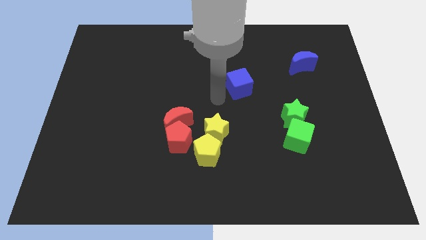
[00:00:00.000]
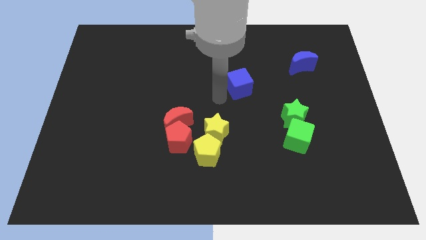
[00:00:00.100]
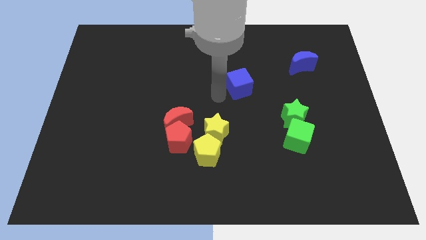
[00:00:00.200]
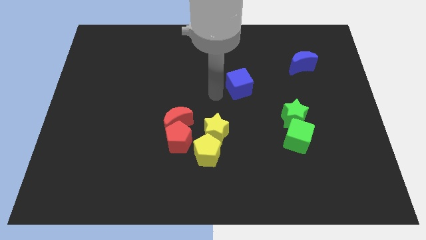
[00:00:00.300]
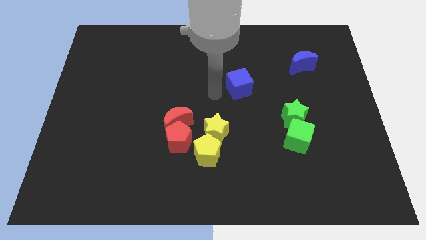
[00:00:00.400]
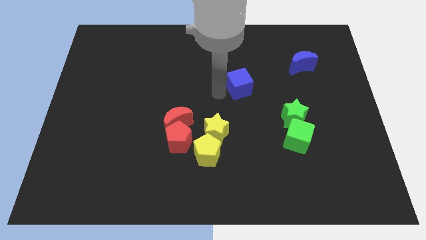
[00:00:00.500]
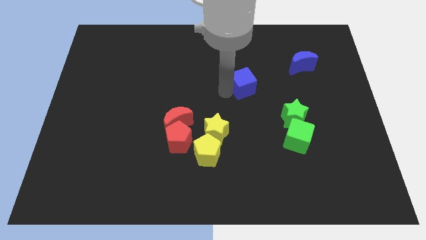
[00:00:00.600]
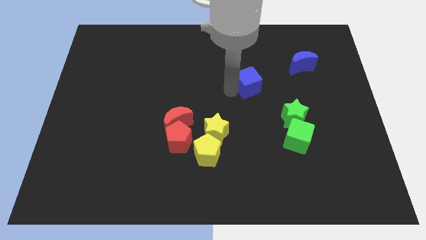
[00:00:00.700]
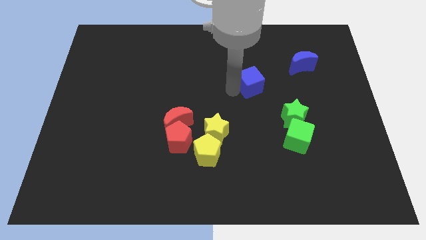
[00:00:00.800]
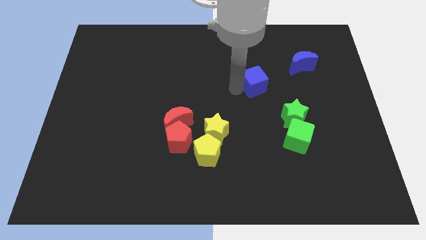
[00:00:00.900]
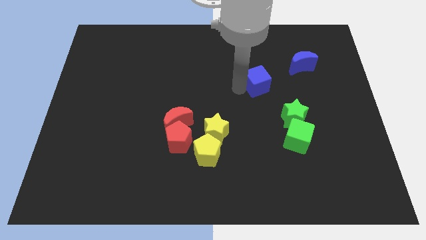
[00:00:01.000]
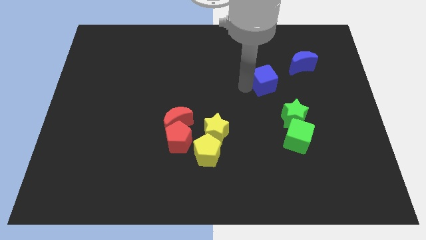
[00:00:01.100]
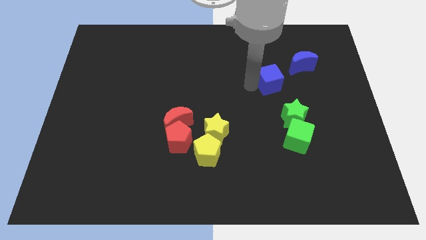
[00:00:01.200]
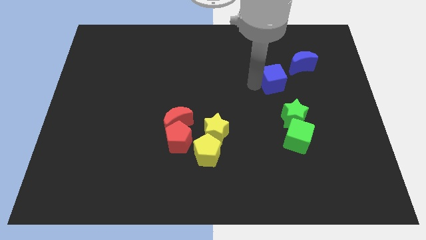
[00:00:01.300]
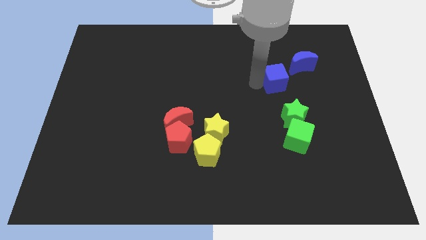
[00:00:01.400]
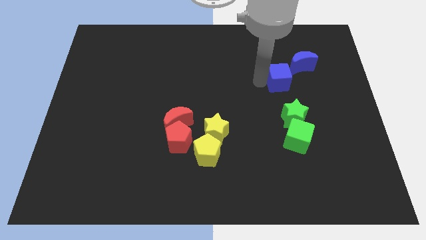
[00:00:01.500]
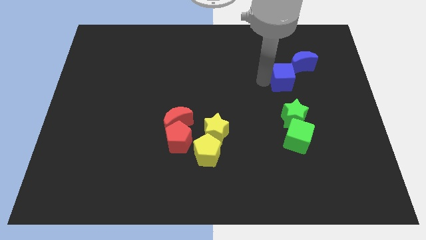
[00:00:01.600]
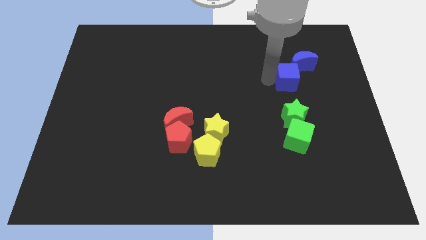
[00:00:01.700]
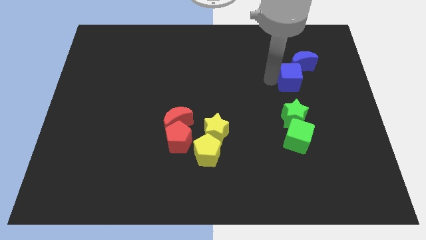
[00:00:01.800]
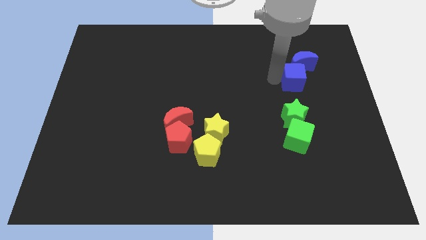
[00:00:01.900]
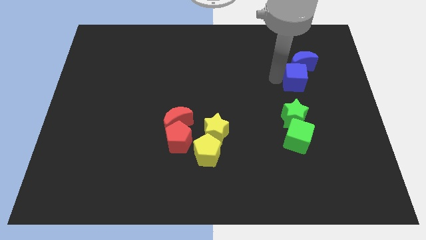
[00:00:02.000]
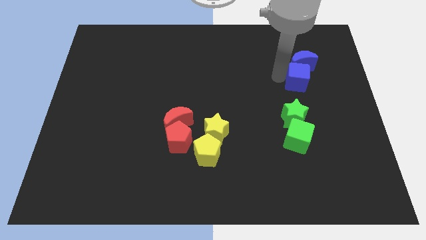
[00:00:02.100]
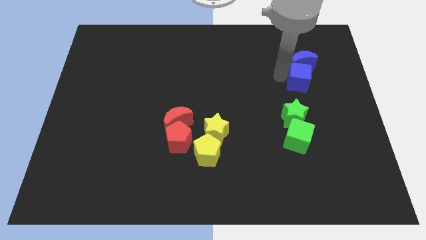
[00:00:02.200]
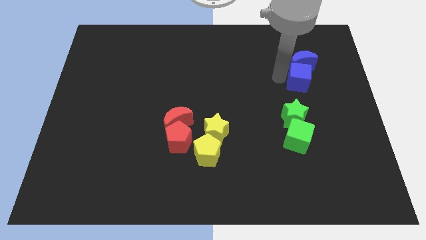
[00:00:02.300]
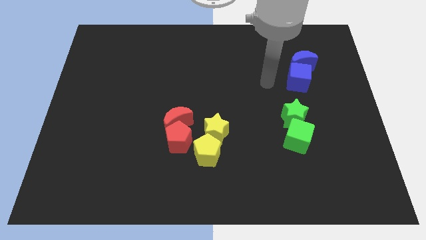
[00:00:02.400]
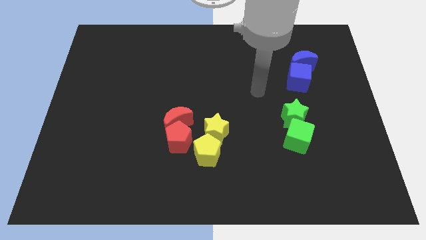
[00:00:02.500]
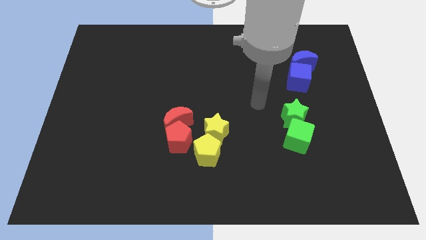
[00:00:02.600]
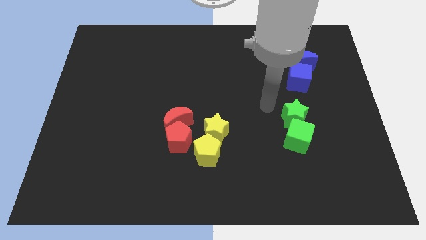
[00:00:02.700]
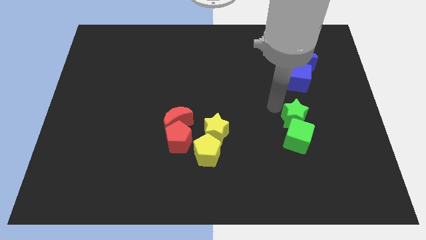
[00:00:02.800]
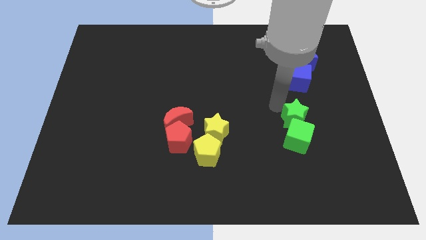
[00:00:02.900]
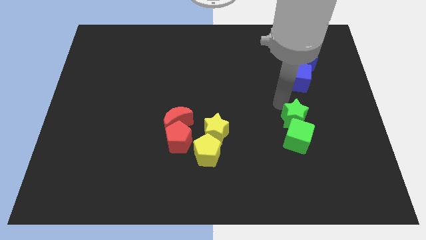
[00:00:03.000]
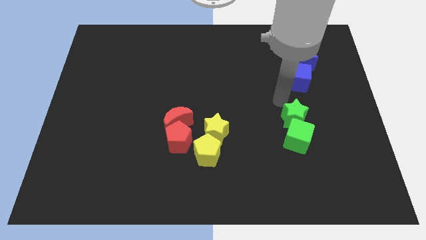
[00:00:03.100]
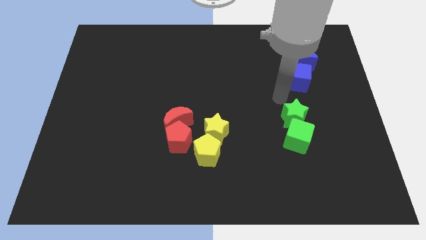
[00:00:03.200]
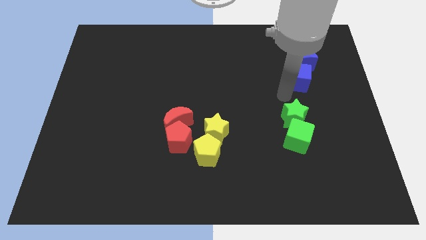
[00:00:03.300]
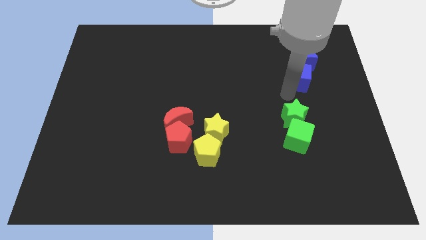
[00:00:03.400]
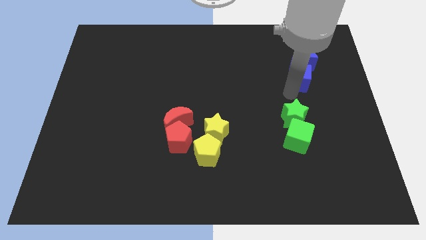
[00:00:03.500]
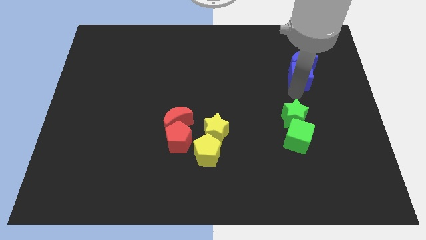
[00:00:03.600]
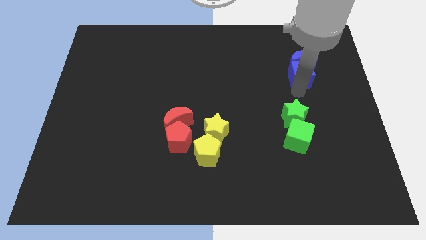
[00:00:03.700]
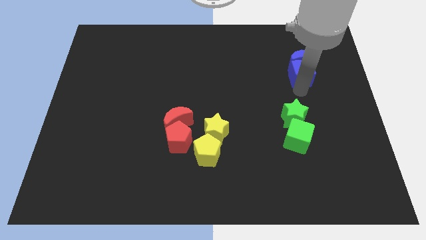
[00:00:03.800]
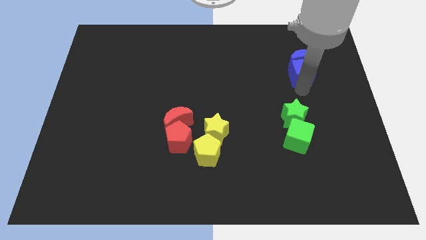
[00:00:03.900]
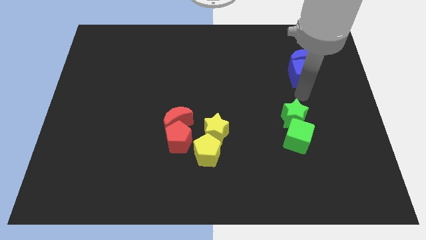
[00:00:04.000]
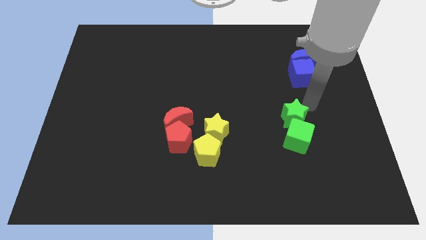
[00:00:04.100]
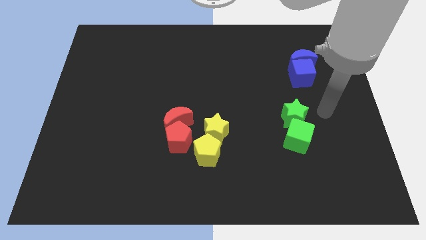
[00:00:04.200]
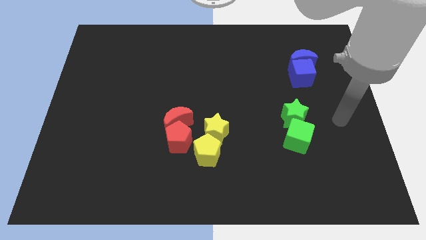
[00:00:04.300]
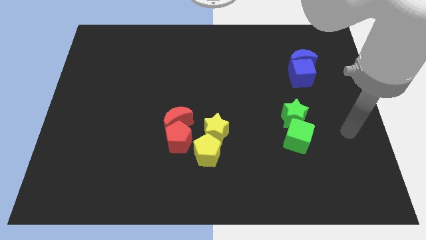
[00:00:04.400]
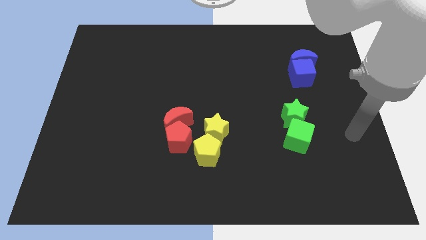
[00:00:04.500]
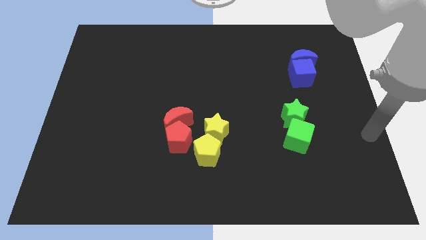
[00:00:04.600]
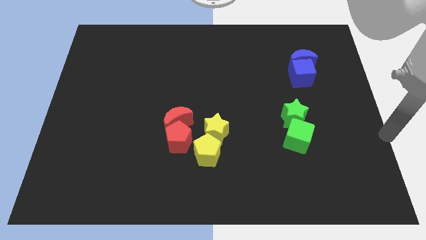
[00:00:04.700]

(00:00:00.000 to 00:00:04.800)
move the blue cube into the blue moon

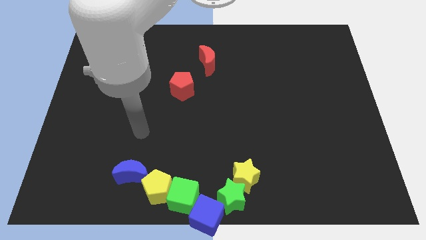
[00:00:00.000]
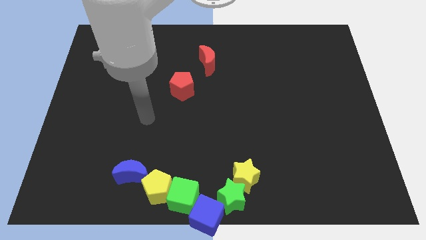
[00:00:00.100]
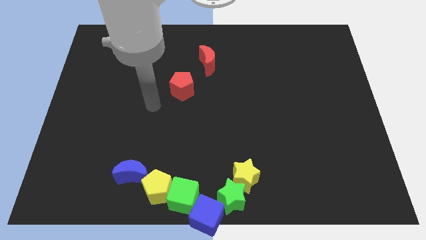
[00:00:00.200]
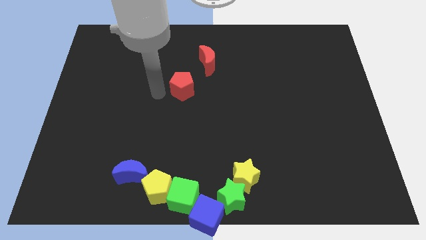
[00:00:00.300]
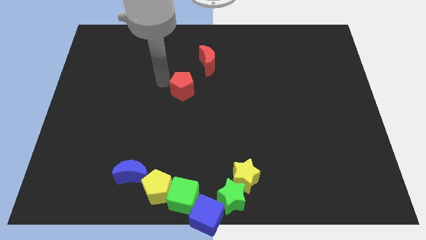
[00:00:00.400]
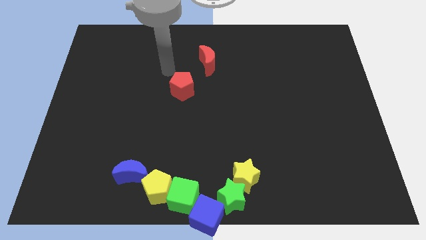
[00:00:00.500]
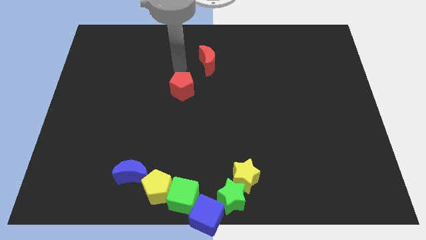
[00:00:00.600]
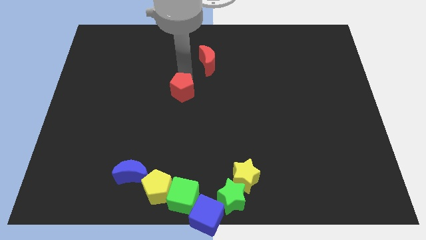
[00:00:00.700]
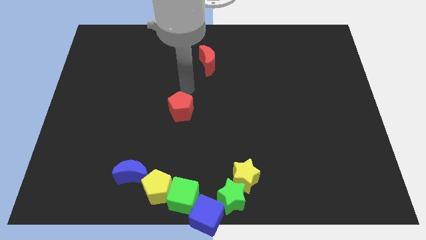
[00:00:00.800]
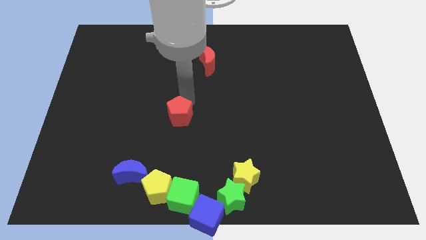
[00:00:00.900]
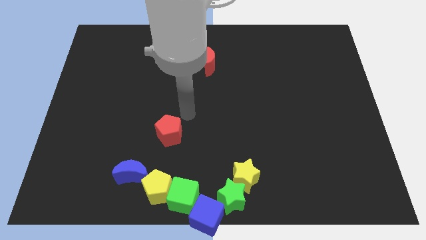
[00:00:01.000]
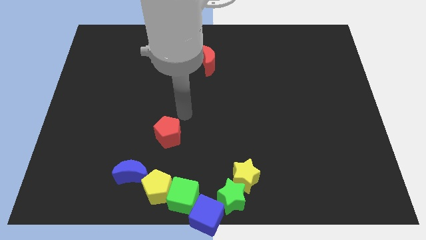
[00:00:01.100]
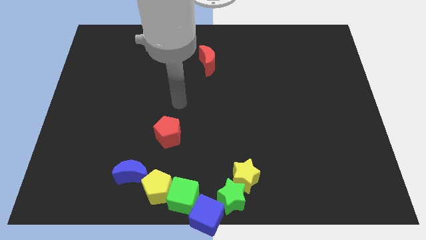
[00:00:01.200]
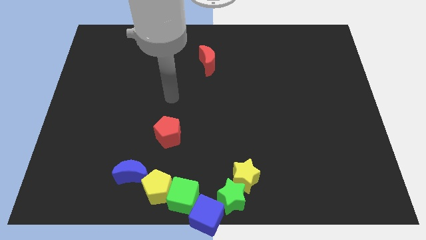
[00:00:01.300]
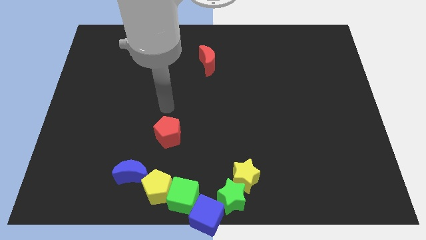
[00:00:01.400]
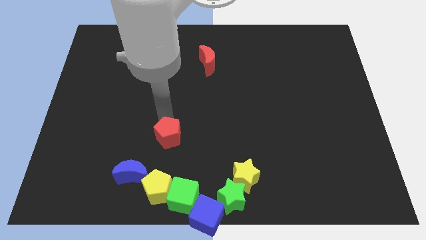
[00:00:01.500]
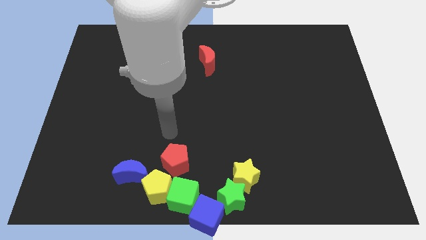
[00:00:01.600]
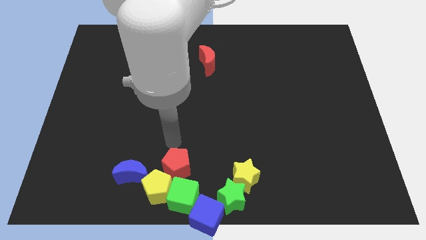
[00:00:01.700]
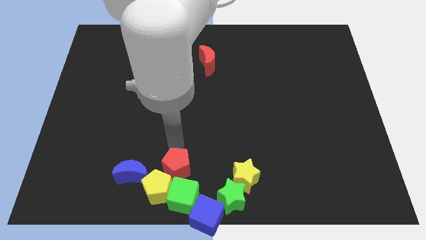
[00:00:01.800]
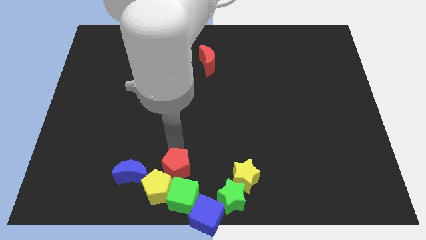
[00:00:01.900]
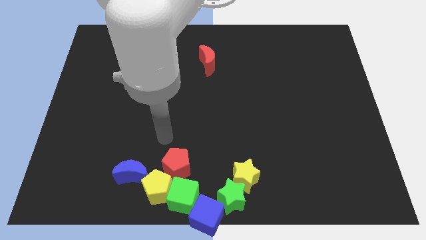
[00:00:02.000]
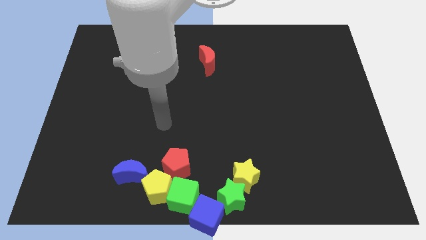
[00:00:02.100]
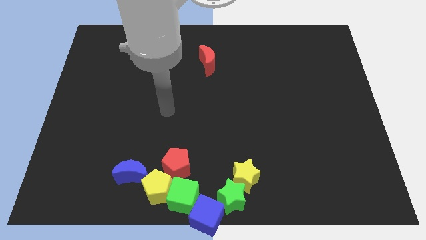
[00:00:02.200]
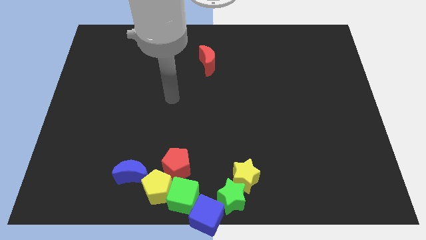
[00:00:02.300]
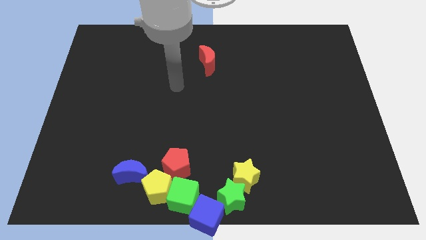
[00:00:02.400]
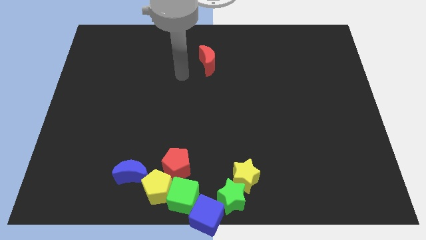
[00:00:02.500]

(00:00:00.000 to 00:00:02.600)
move the red pentagon top left of the green cube

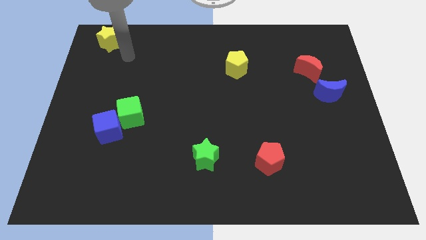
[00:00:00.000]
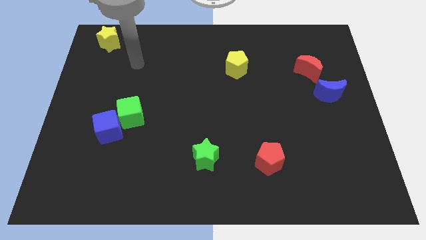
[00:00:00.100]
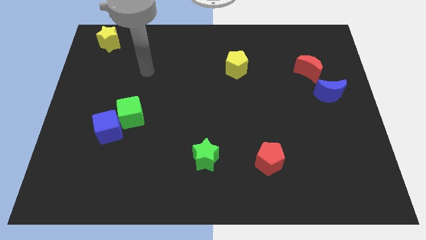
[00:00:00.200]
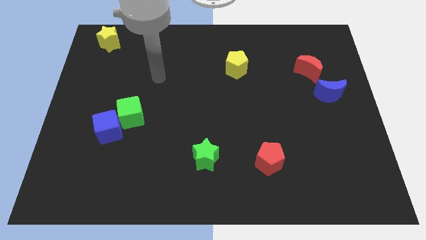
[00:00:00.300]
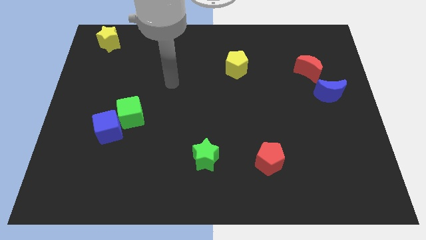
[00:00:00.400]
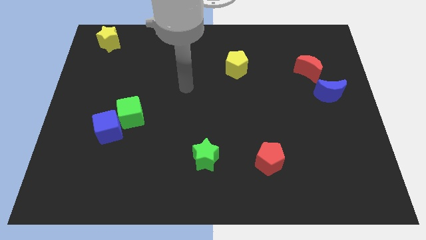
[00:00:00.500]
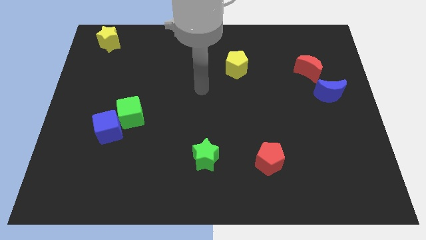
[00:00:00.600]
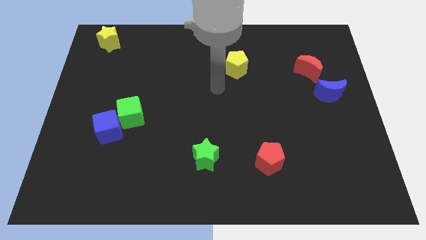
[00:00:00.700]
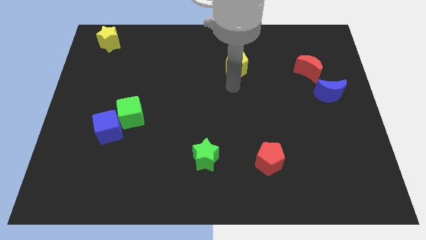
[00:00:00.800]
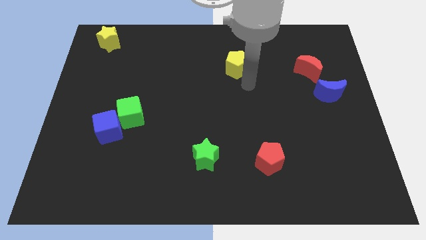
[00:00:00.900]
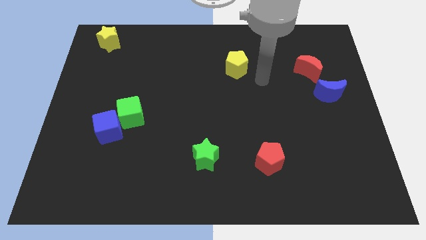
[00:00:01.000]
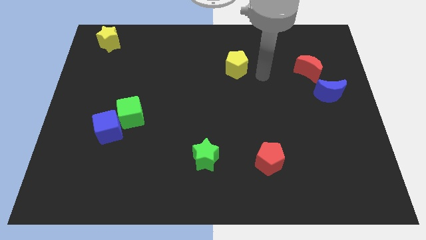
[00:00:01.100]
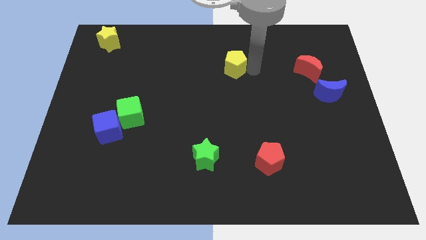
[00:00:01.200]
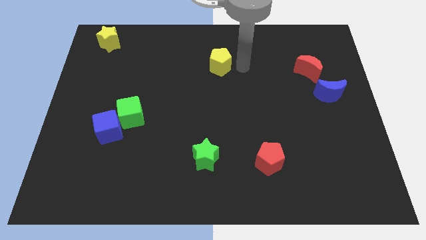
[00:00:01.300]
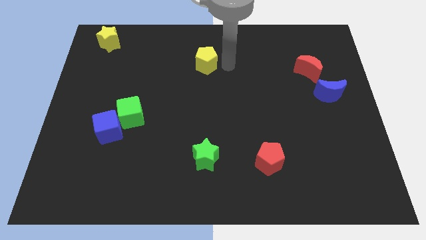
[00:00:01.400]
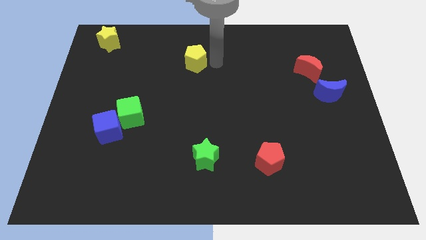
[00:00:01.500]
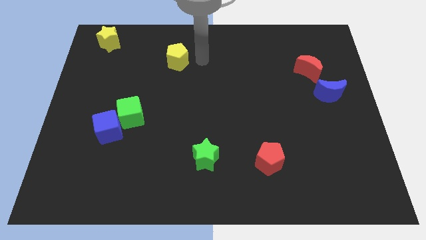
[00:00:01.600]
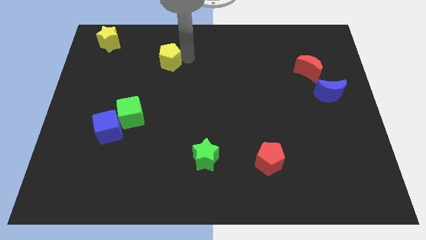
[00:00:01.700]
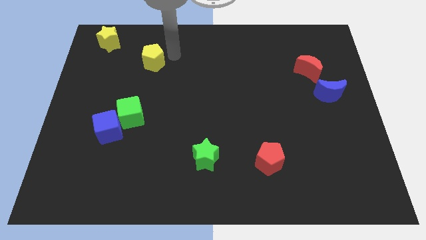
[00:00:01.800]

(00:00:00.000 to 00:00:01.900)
move the yellow pentagon towards the yellow star
